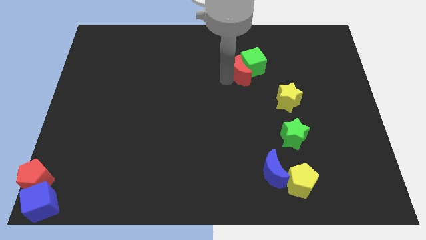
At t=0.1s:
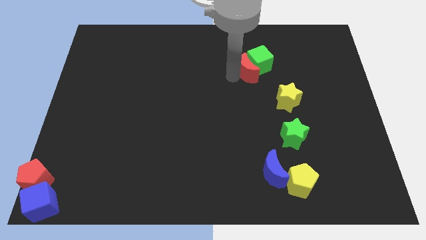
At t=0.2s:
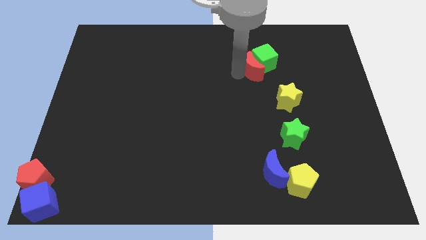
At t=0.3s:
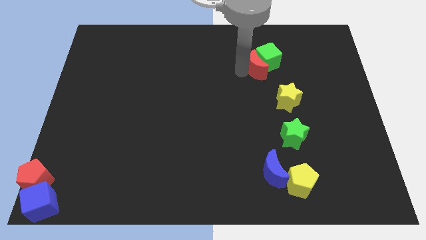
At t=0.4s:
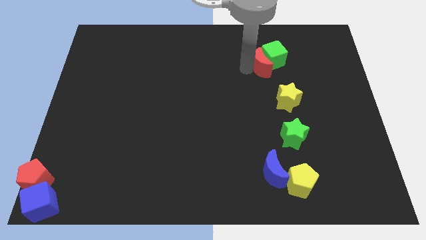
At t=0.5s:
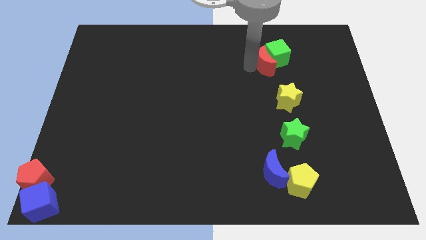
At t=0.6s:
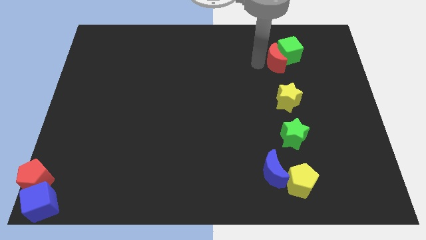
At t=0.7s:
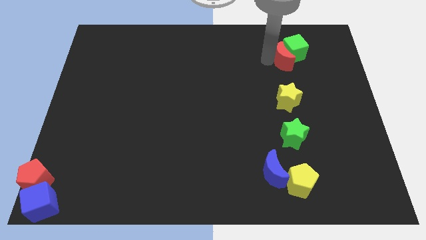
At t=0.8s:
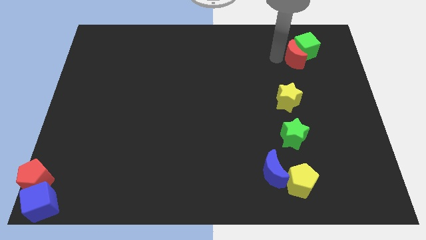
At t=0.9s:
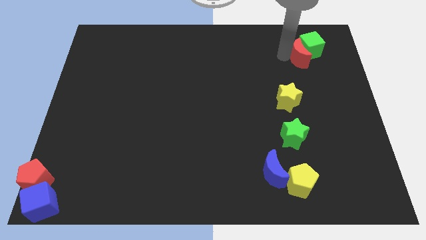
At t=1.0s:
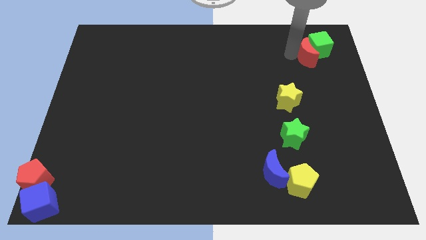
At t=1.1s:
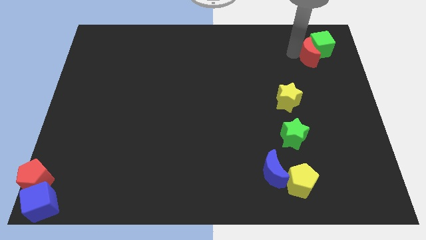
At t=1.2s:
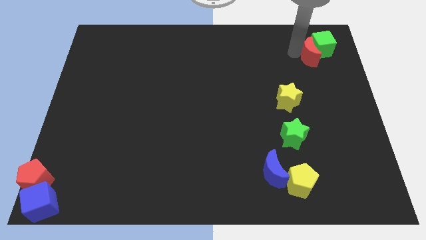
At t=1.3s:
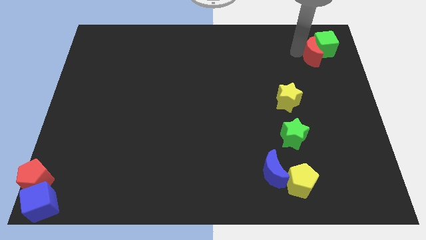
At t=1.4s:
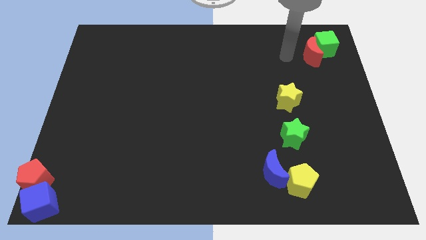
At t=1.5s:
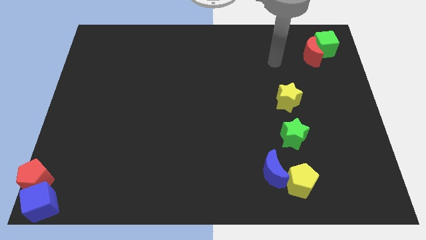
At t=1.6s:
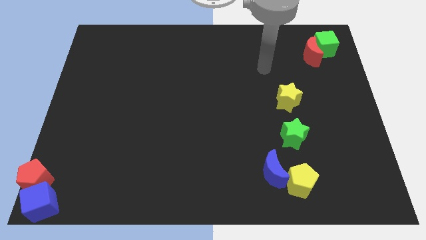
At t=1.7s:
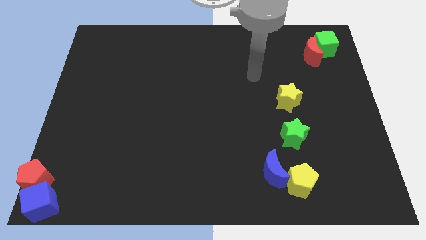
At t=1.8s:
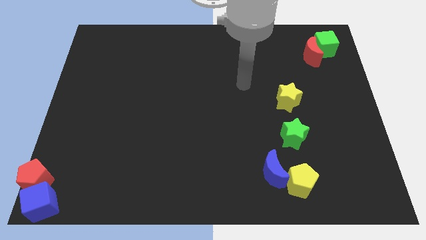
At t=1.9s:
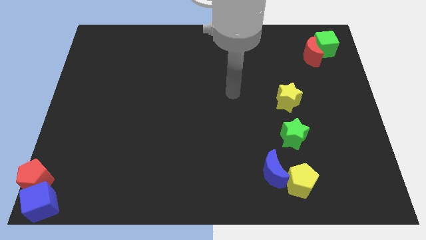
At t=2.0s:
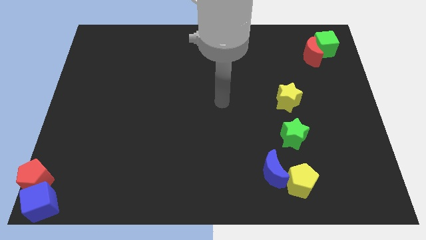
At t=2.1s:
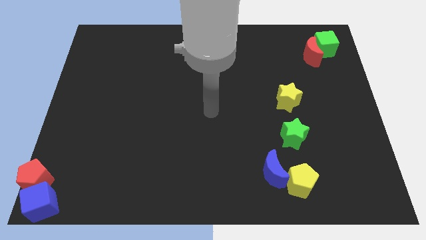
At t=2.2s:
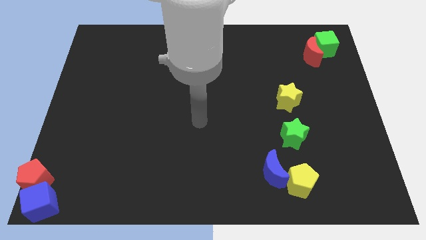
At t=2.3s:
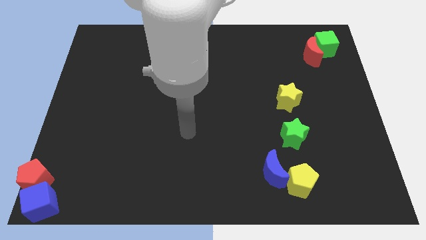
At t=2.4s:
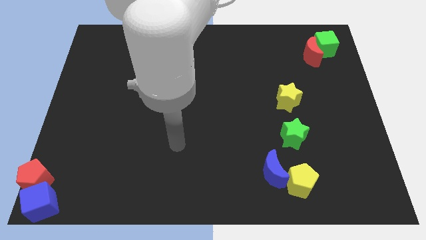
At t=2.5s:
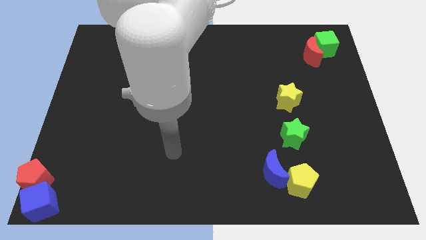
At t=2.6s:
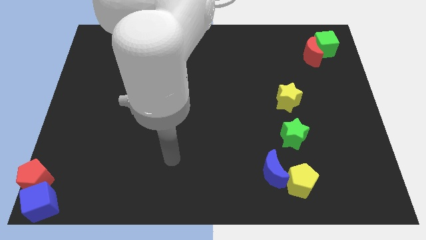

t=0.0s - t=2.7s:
push the red crescent along with the green cube to the top right of the yellow star

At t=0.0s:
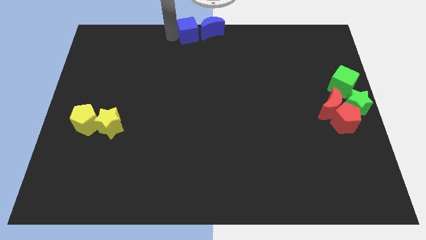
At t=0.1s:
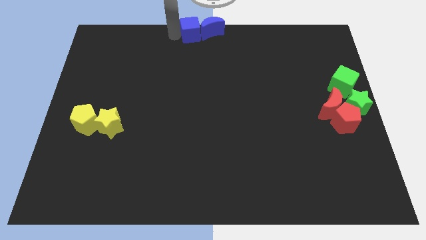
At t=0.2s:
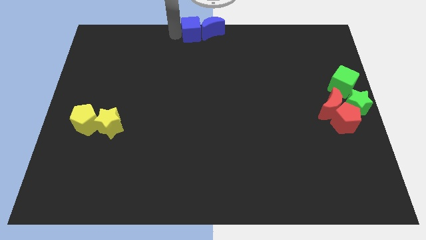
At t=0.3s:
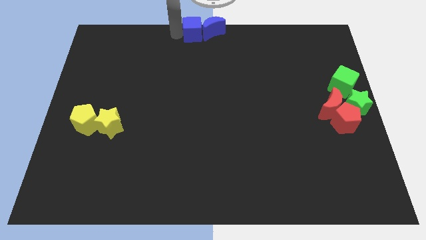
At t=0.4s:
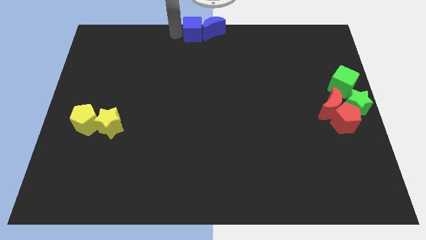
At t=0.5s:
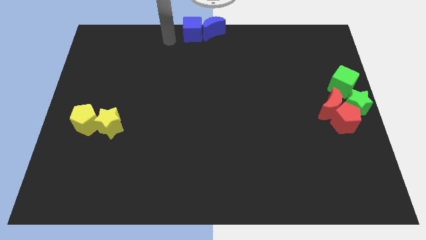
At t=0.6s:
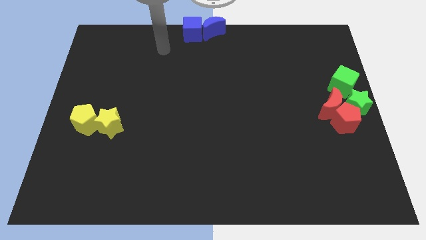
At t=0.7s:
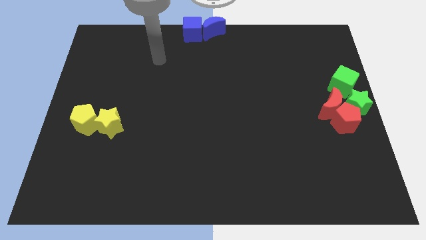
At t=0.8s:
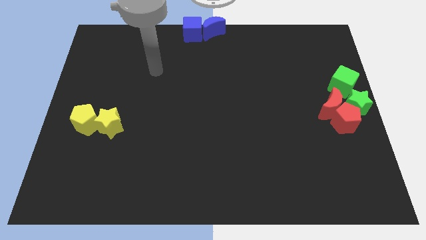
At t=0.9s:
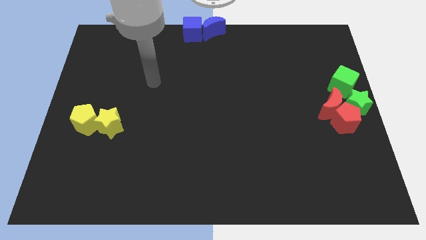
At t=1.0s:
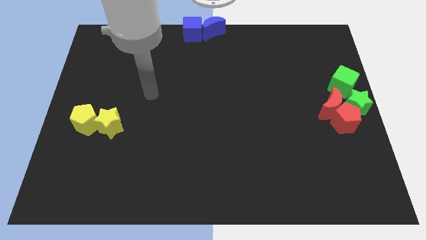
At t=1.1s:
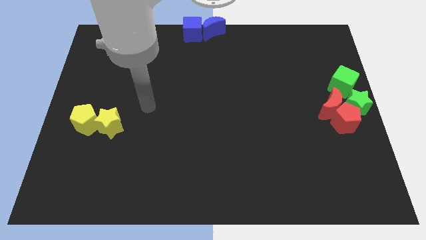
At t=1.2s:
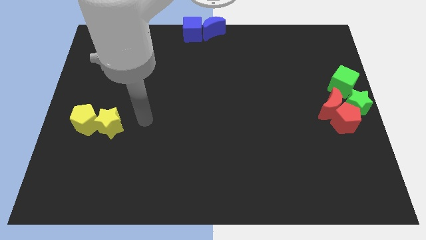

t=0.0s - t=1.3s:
push blue cube into blue moon

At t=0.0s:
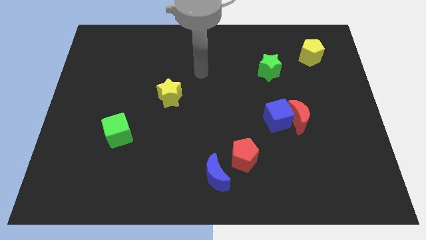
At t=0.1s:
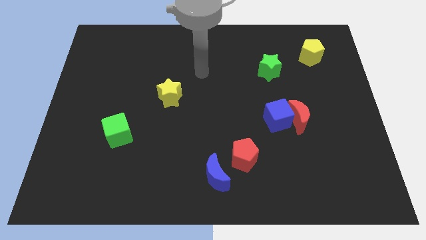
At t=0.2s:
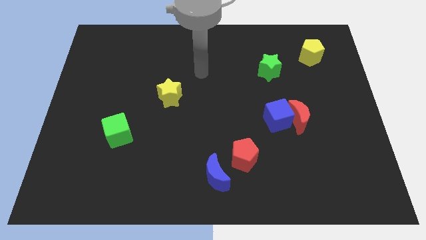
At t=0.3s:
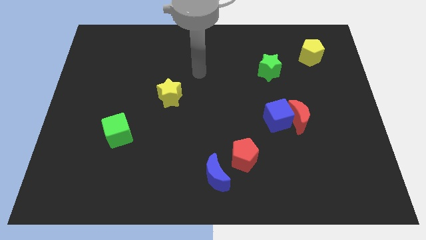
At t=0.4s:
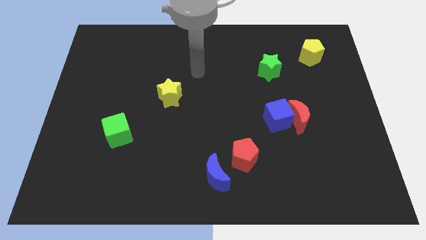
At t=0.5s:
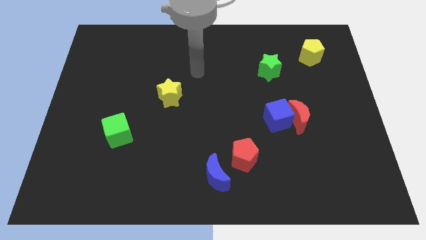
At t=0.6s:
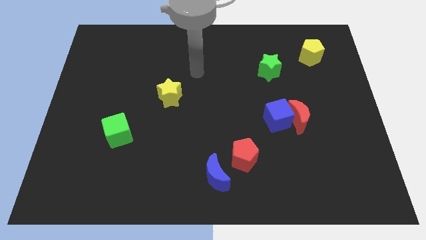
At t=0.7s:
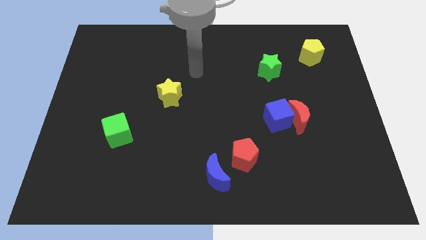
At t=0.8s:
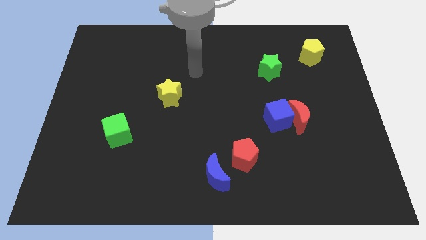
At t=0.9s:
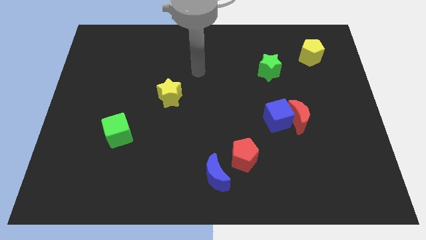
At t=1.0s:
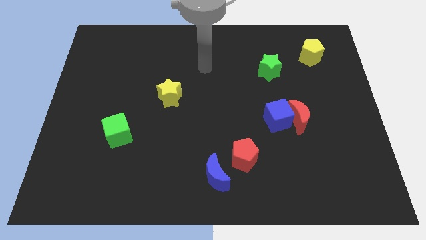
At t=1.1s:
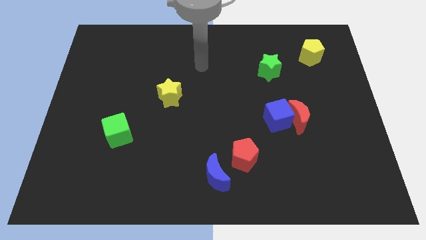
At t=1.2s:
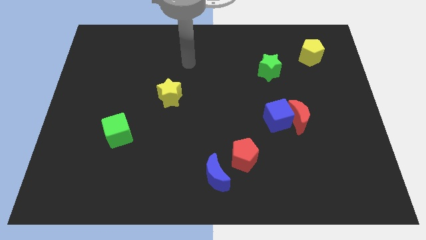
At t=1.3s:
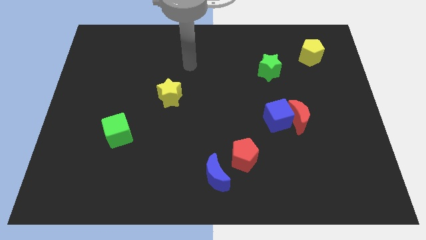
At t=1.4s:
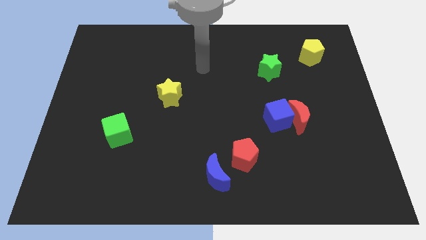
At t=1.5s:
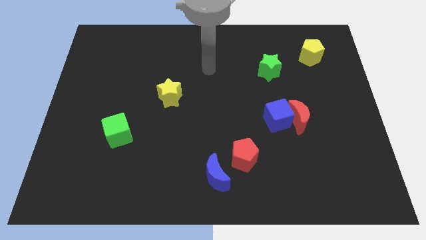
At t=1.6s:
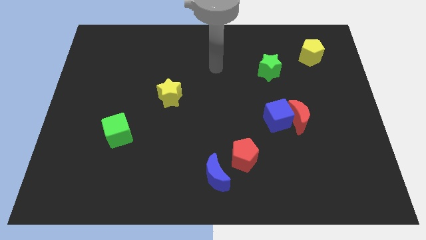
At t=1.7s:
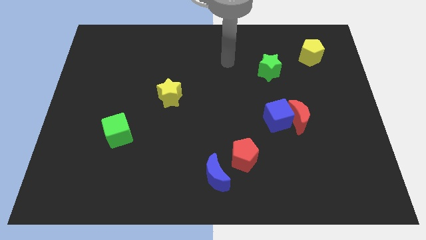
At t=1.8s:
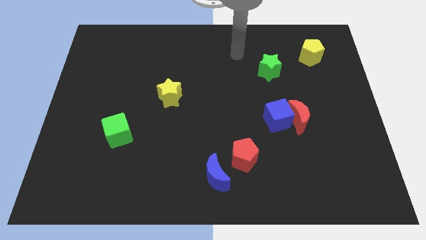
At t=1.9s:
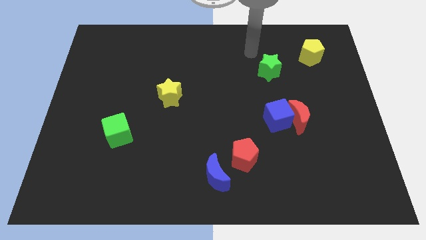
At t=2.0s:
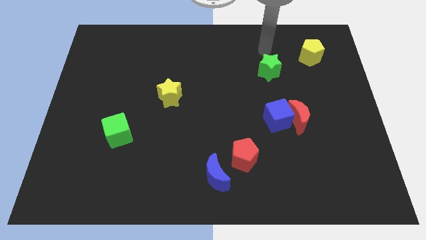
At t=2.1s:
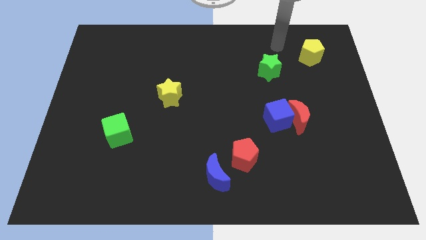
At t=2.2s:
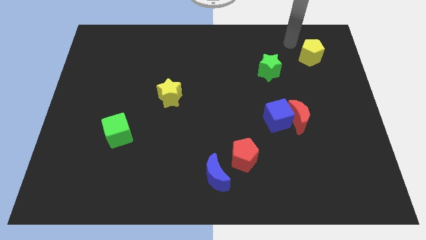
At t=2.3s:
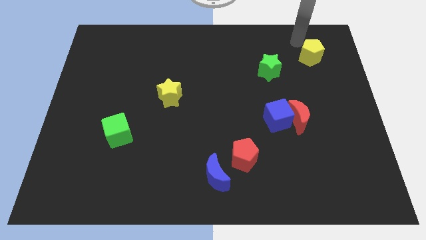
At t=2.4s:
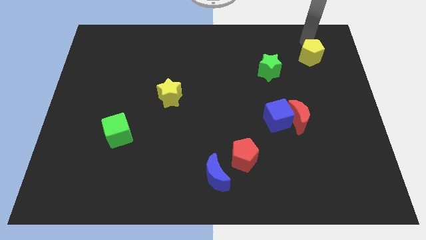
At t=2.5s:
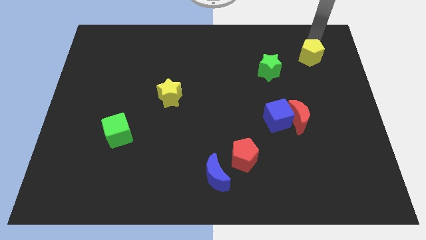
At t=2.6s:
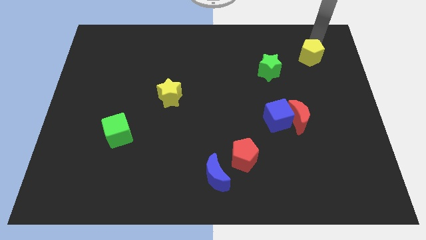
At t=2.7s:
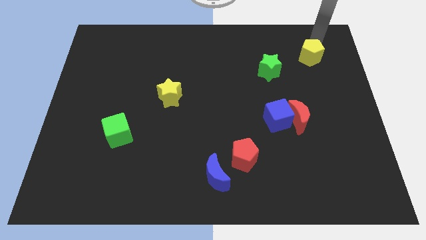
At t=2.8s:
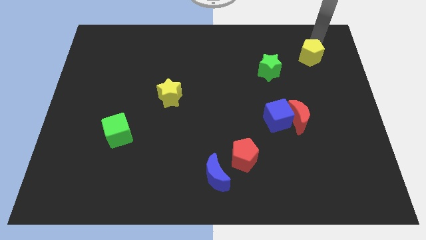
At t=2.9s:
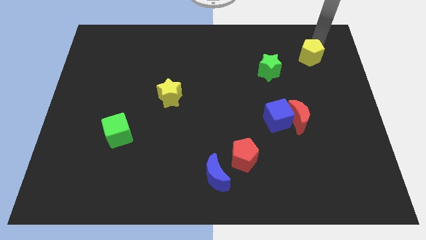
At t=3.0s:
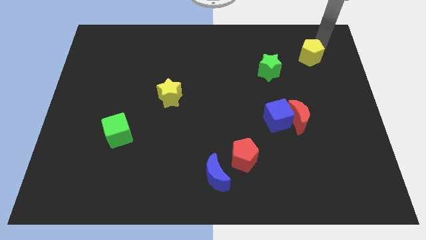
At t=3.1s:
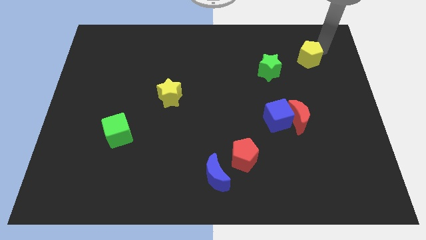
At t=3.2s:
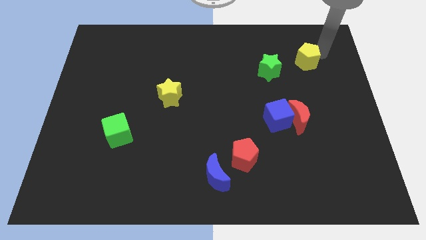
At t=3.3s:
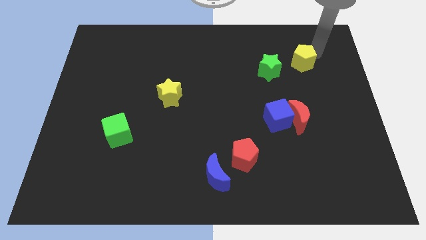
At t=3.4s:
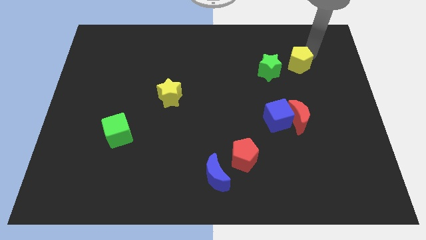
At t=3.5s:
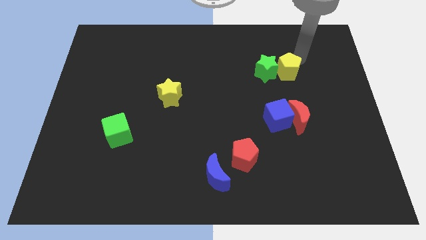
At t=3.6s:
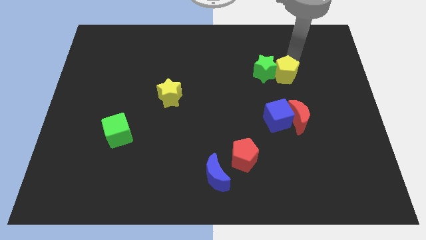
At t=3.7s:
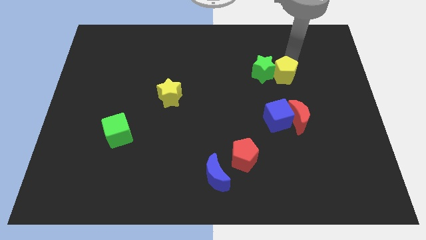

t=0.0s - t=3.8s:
move the yellow pentagon to the right of the green star

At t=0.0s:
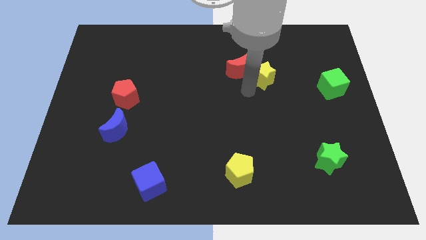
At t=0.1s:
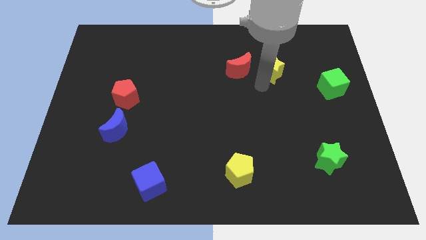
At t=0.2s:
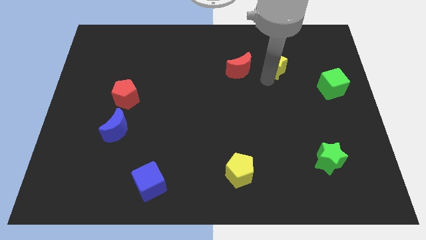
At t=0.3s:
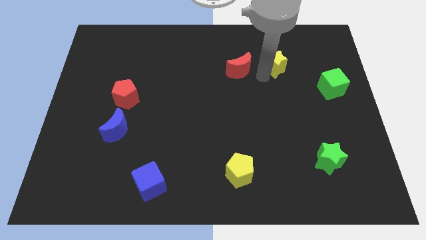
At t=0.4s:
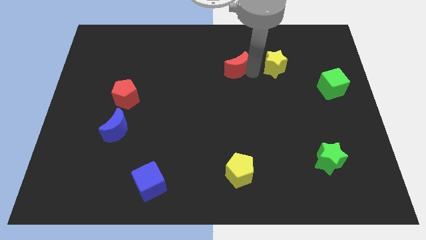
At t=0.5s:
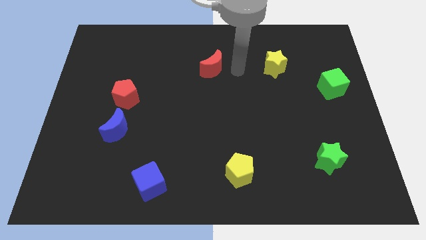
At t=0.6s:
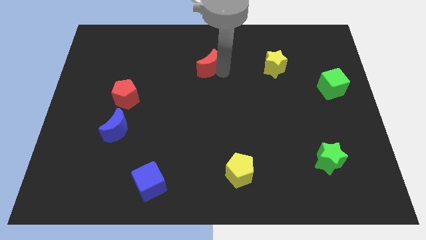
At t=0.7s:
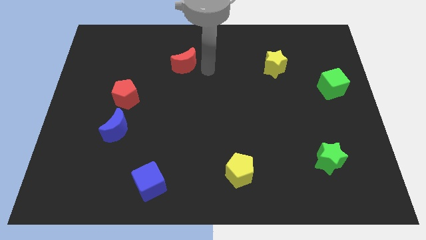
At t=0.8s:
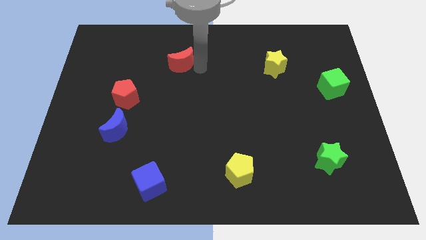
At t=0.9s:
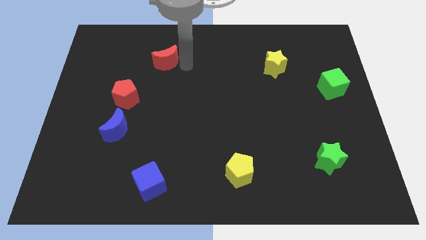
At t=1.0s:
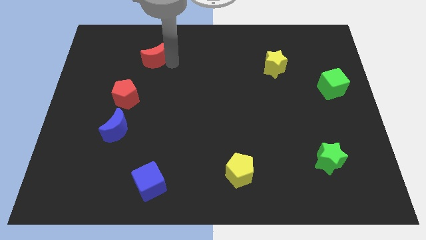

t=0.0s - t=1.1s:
separate the red moon and yellow star

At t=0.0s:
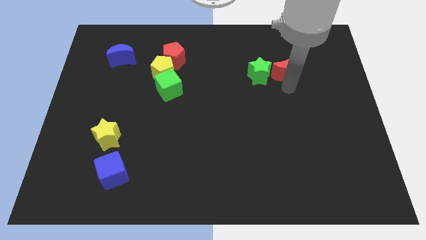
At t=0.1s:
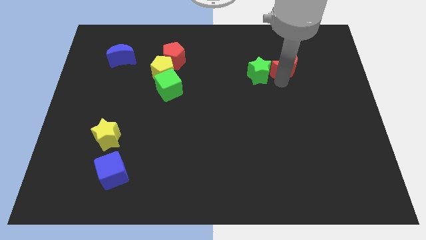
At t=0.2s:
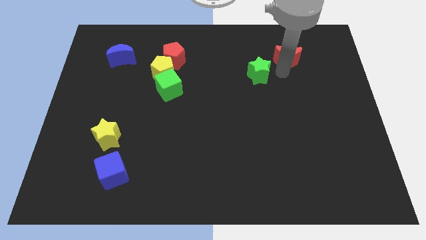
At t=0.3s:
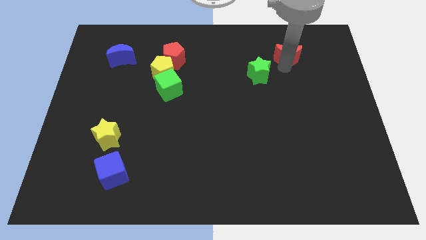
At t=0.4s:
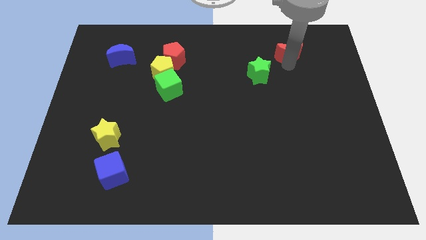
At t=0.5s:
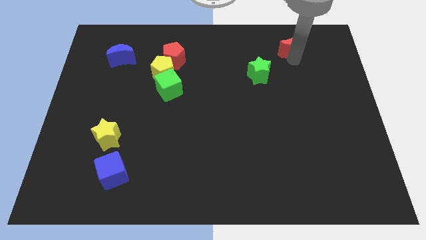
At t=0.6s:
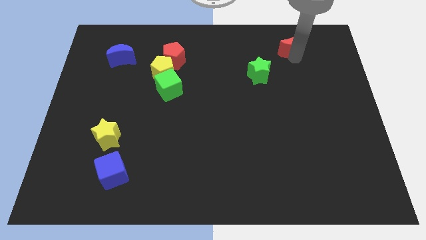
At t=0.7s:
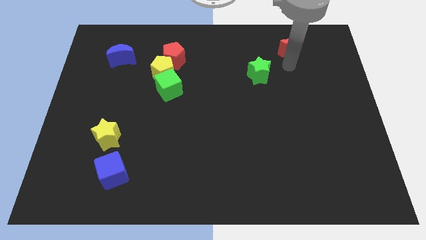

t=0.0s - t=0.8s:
place red crescent slightly upwards
